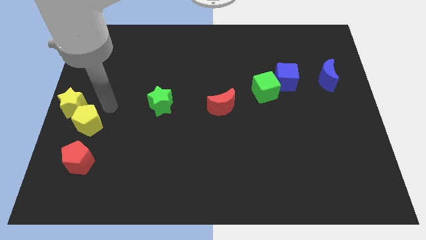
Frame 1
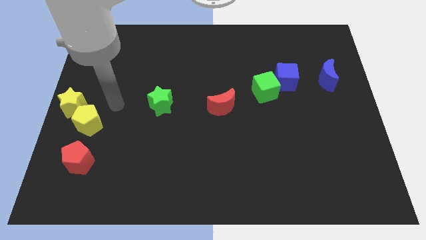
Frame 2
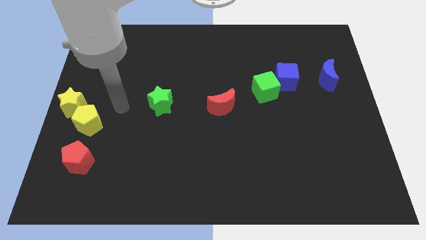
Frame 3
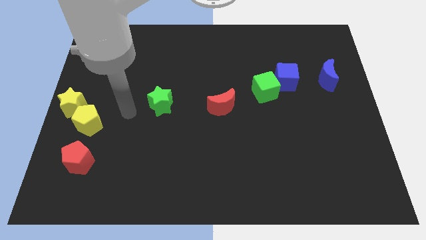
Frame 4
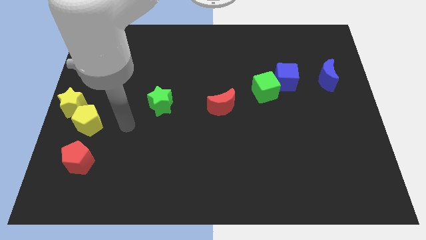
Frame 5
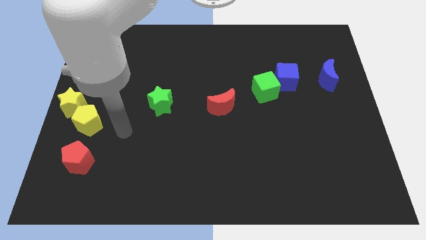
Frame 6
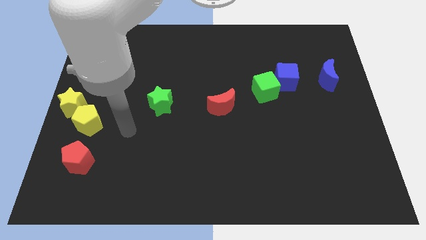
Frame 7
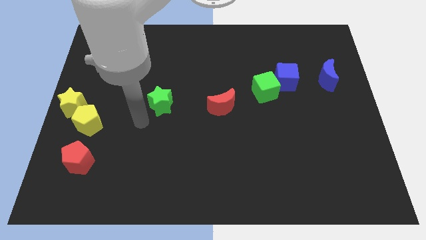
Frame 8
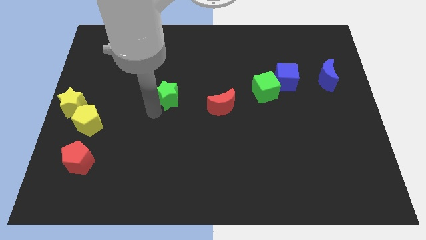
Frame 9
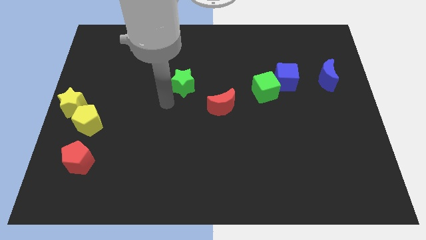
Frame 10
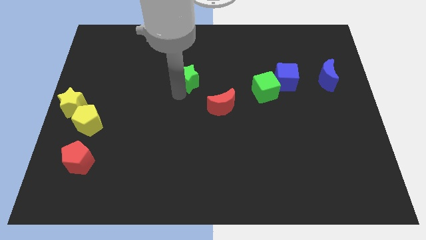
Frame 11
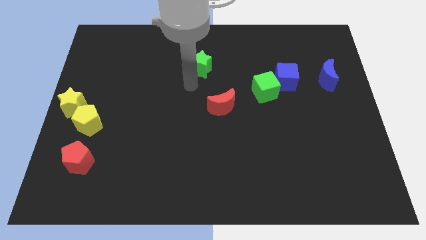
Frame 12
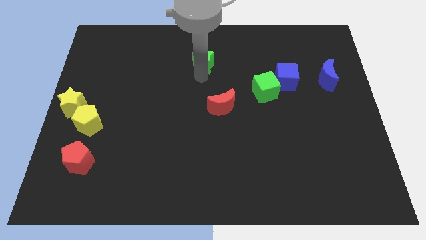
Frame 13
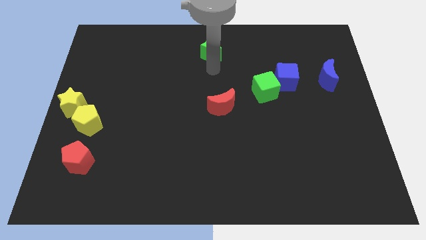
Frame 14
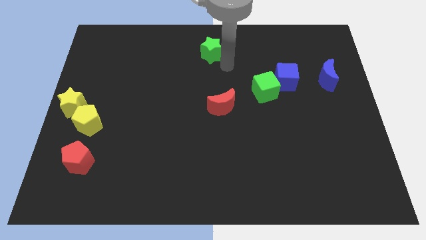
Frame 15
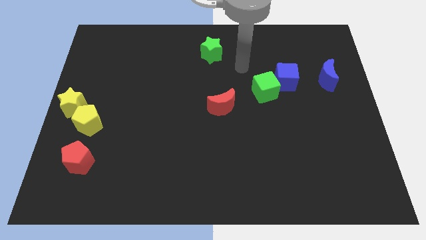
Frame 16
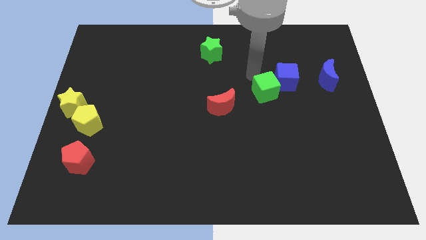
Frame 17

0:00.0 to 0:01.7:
push the green star towards the top center

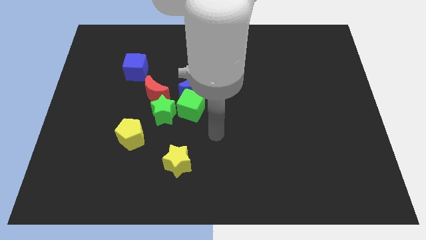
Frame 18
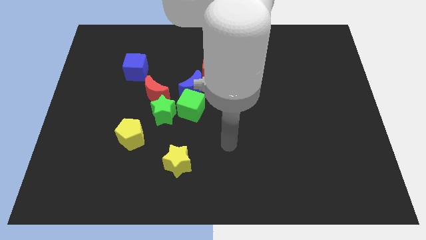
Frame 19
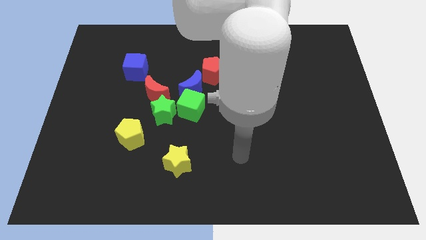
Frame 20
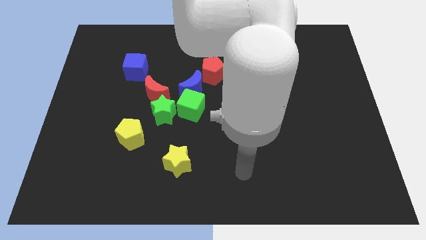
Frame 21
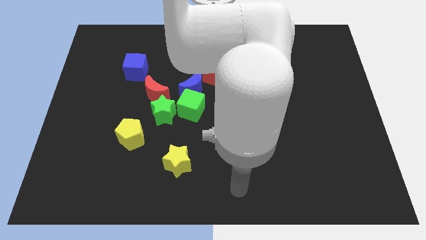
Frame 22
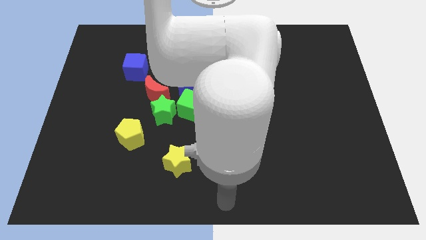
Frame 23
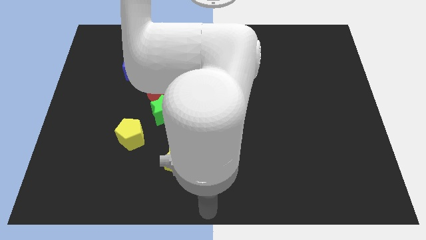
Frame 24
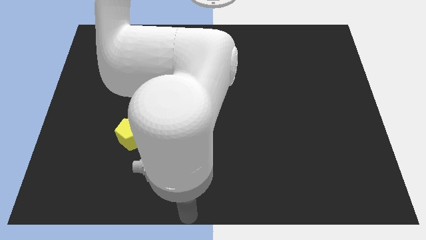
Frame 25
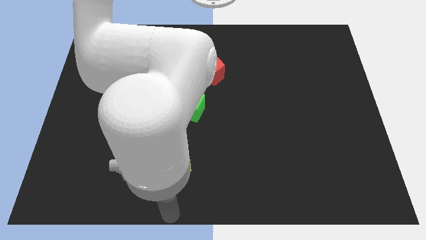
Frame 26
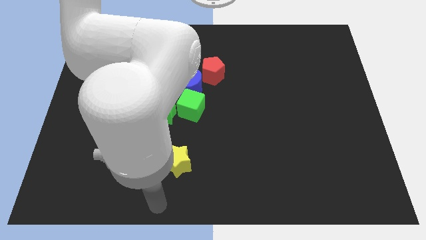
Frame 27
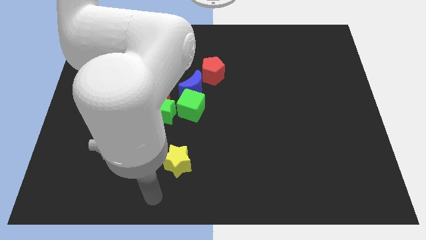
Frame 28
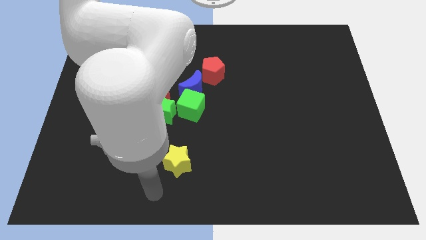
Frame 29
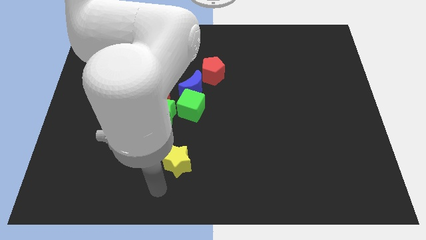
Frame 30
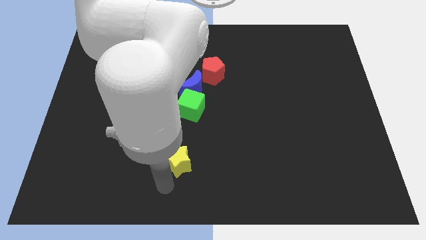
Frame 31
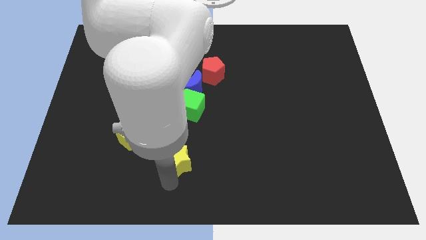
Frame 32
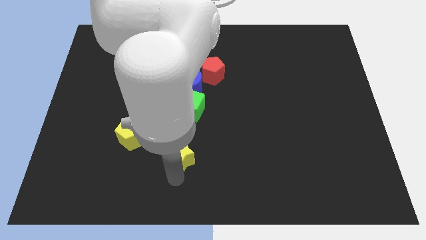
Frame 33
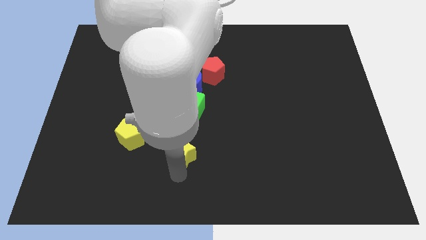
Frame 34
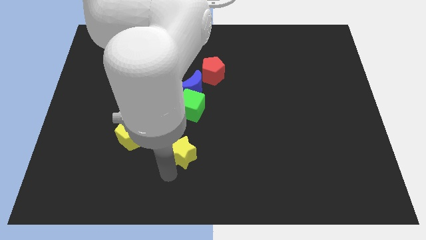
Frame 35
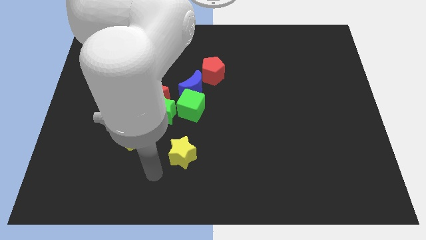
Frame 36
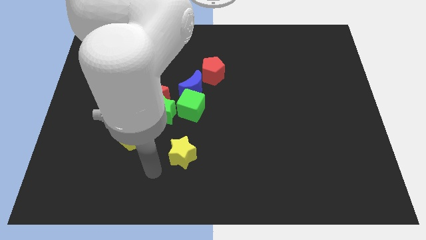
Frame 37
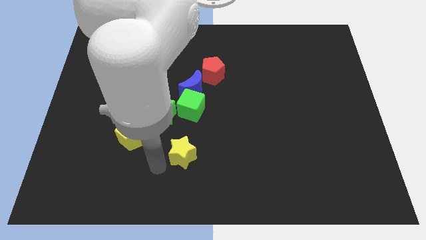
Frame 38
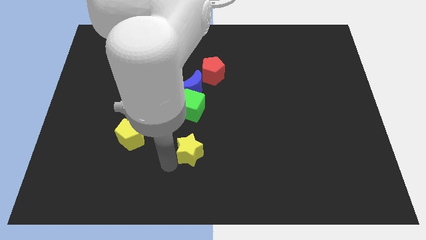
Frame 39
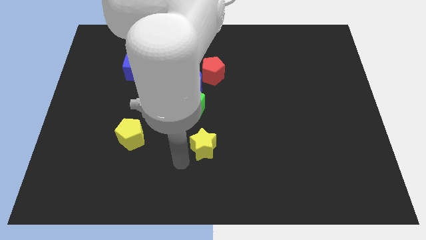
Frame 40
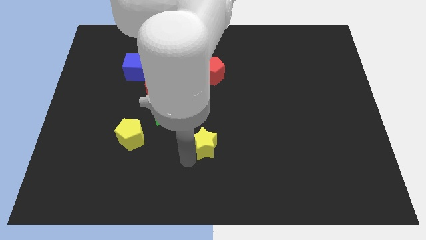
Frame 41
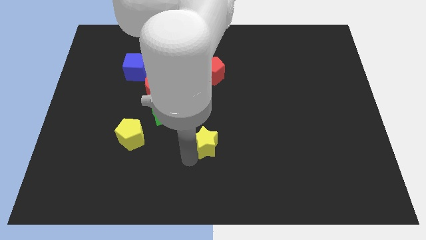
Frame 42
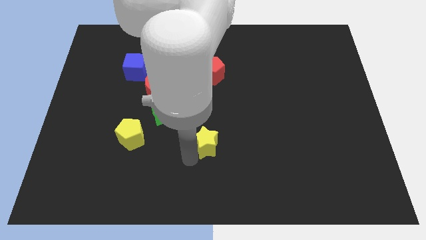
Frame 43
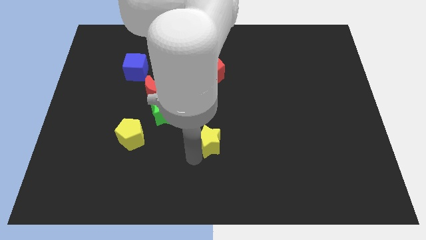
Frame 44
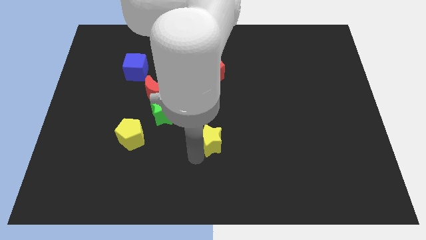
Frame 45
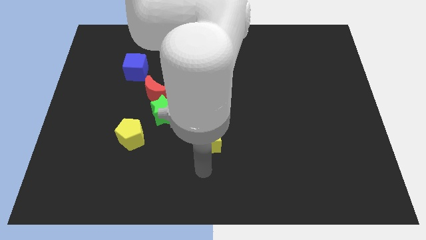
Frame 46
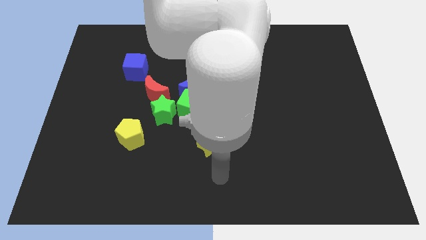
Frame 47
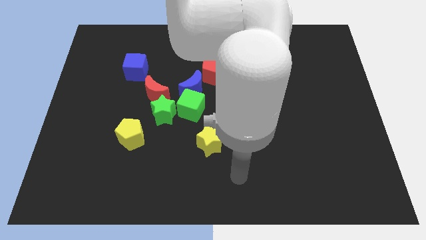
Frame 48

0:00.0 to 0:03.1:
push the yellow star diagonally below the bottom right side of the green cube

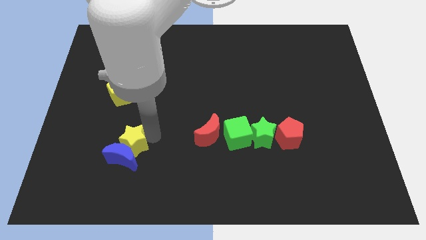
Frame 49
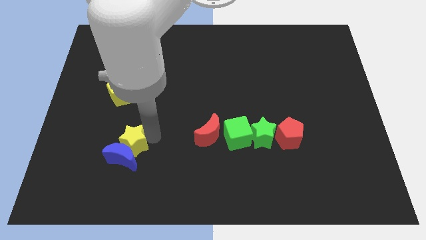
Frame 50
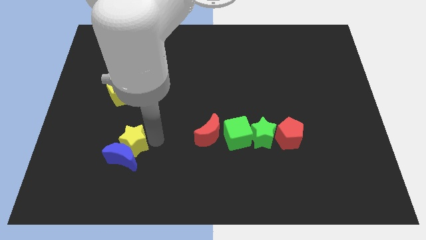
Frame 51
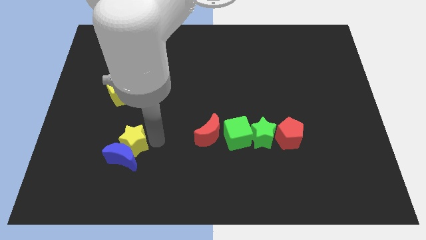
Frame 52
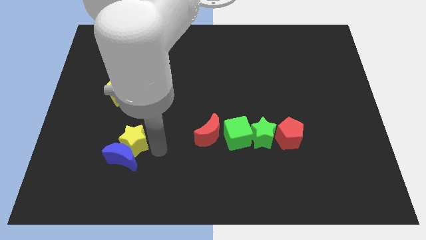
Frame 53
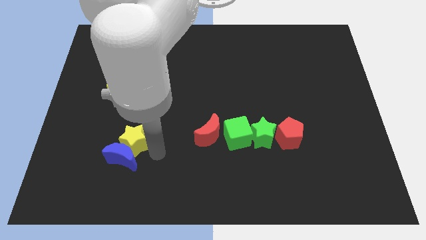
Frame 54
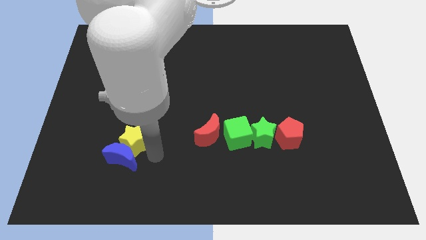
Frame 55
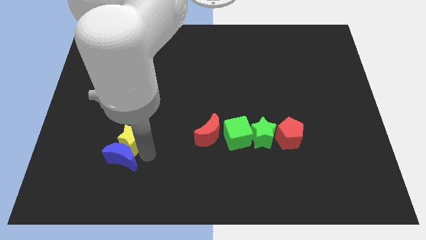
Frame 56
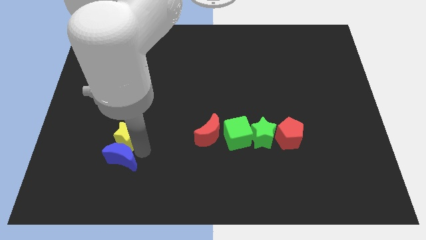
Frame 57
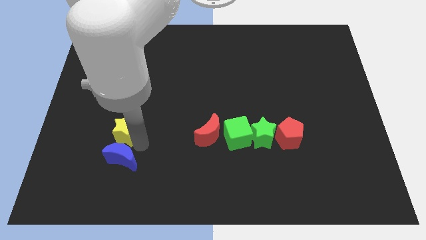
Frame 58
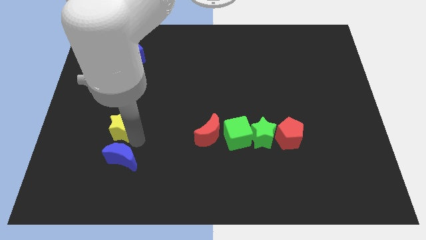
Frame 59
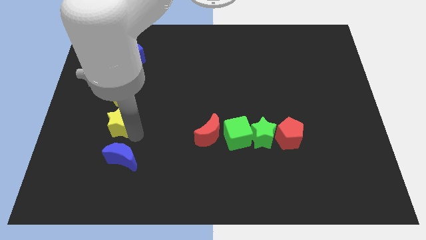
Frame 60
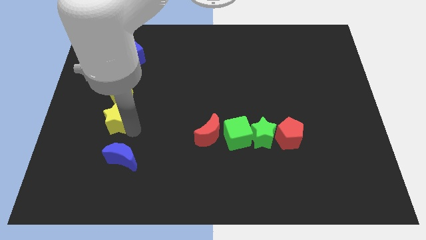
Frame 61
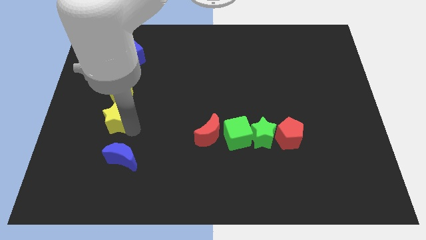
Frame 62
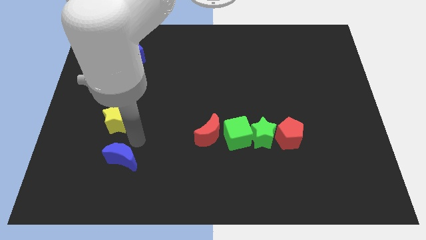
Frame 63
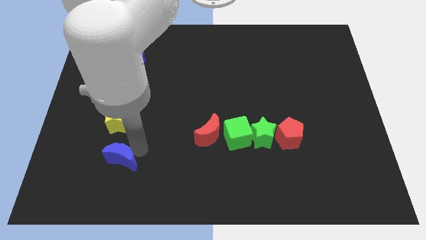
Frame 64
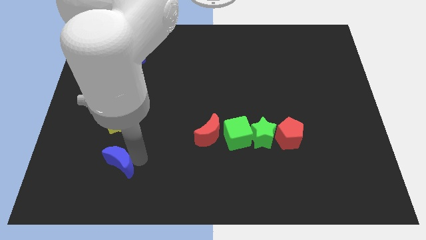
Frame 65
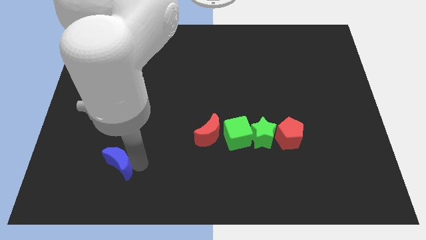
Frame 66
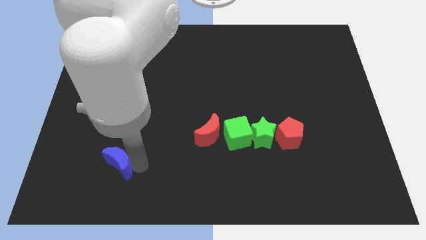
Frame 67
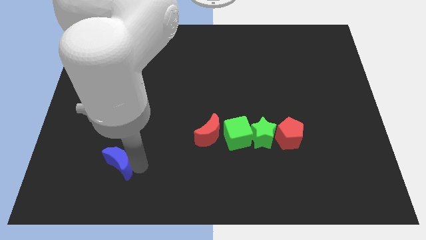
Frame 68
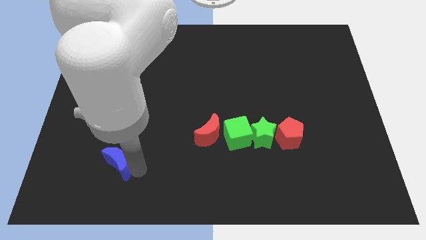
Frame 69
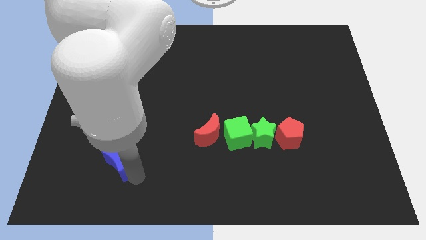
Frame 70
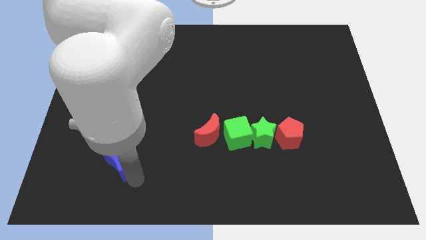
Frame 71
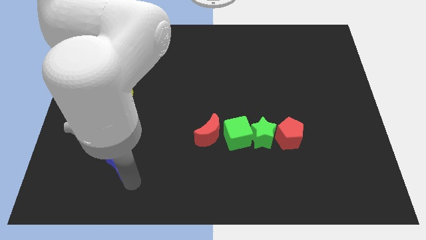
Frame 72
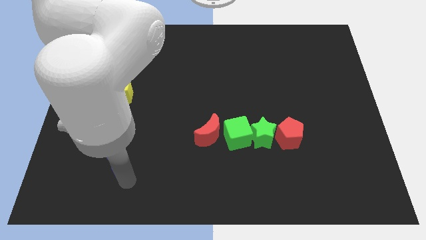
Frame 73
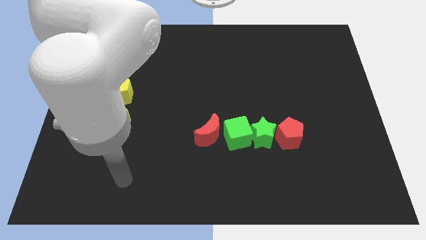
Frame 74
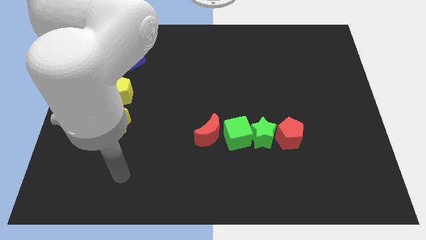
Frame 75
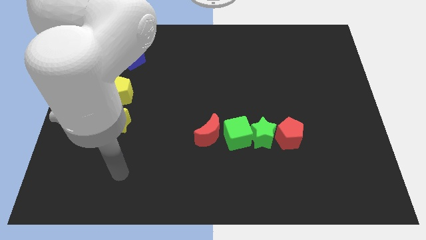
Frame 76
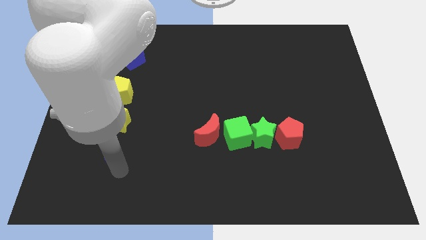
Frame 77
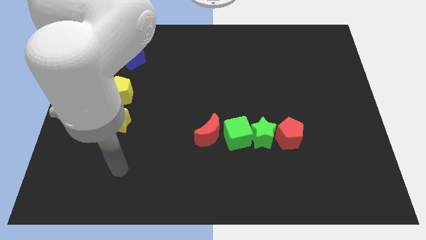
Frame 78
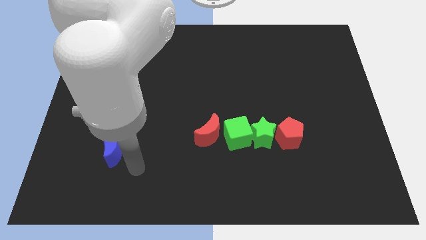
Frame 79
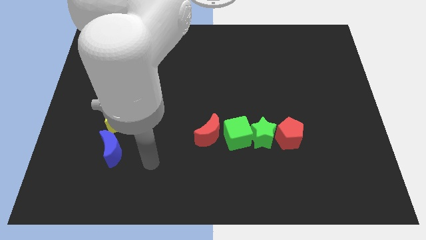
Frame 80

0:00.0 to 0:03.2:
separate the yellow star and the blue crescent

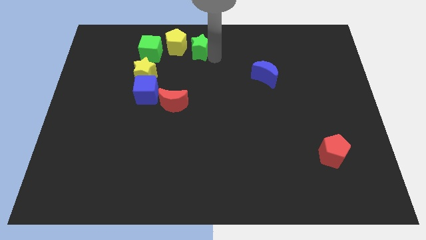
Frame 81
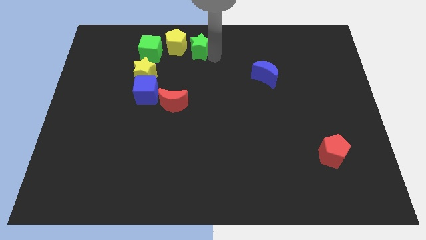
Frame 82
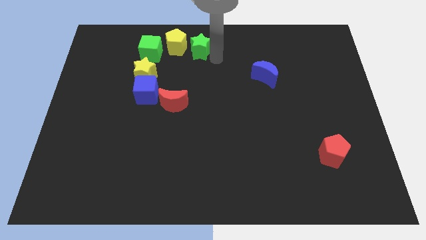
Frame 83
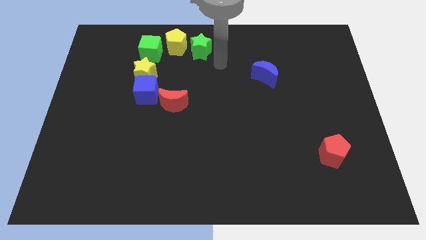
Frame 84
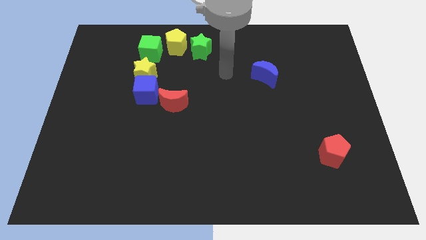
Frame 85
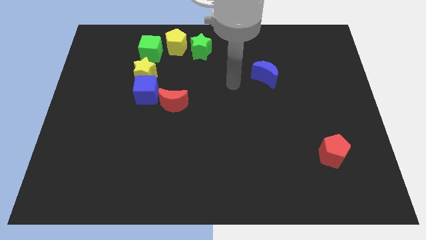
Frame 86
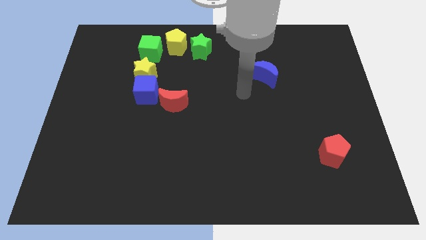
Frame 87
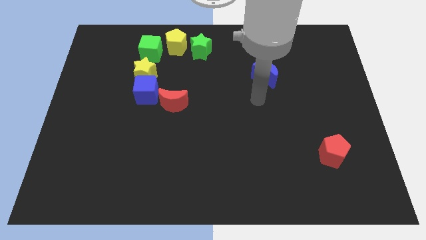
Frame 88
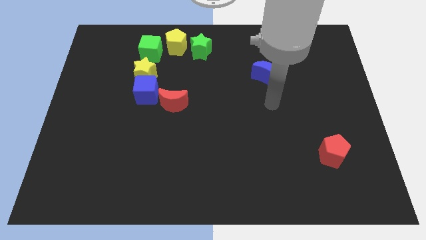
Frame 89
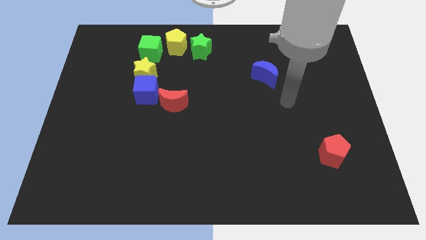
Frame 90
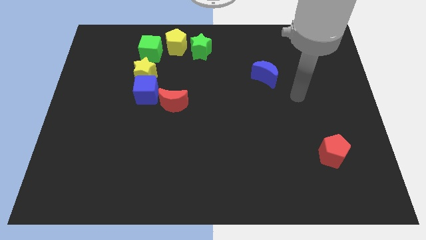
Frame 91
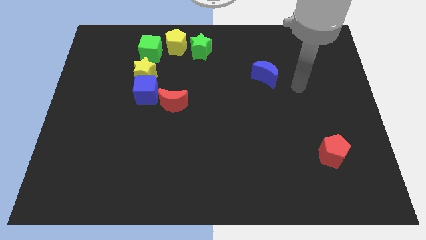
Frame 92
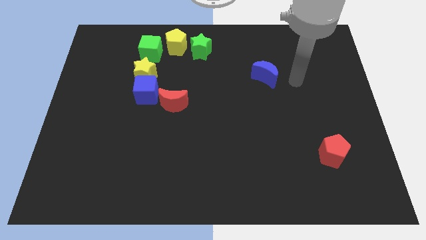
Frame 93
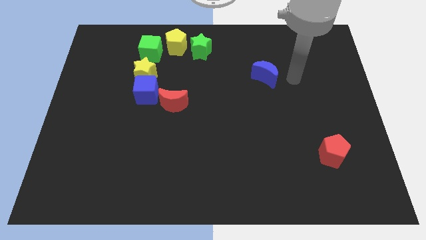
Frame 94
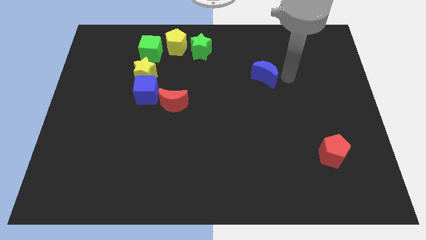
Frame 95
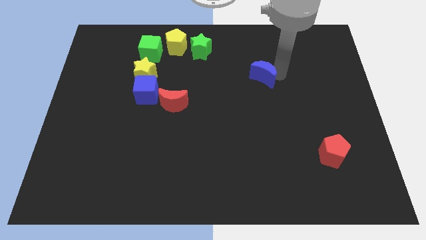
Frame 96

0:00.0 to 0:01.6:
place the arm right to the blue moon
